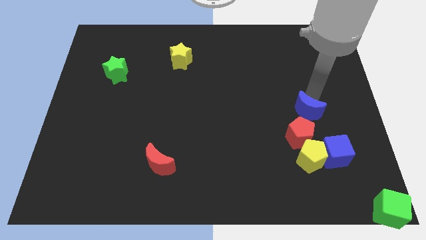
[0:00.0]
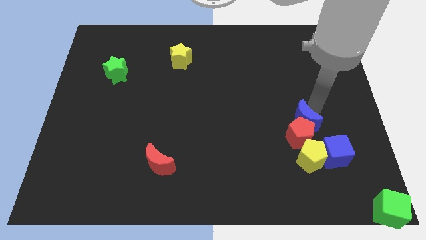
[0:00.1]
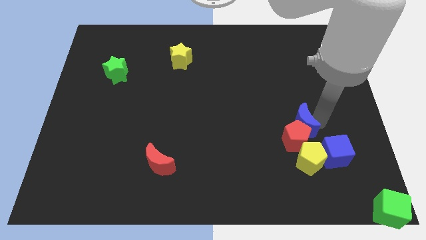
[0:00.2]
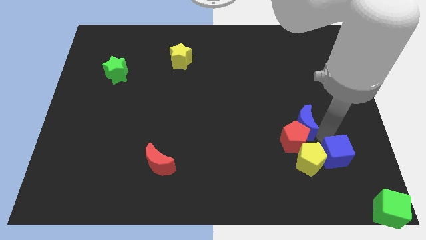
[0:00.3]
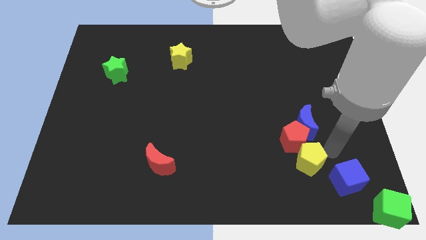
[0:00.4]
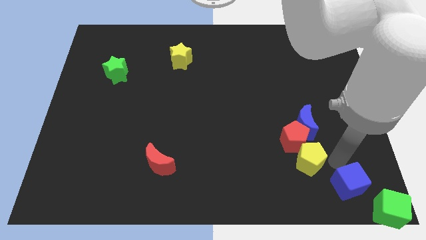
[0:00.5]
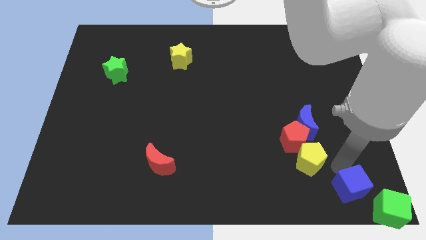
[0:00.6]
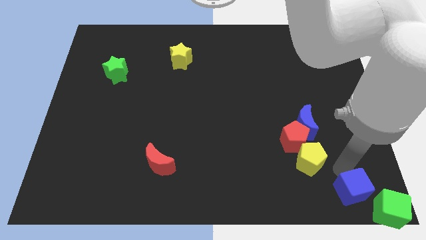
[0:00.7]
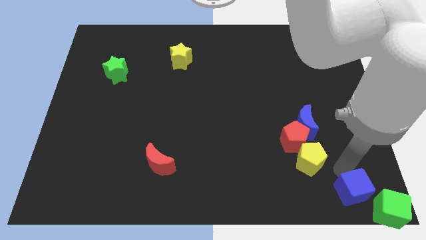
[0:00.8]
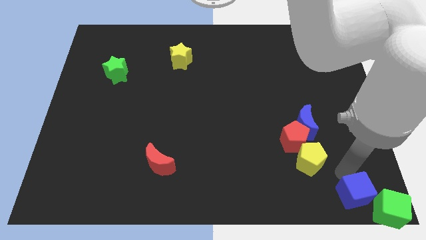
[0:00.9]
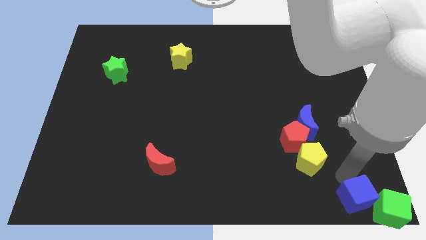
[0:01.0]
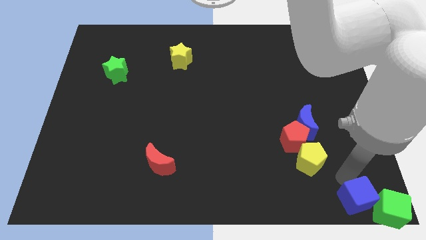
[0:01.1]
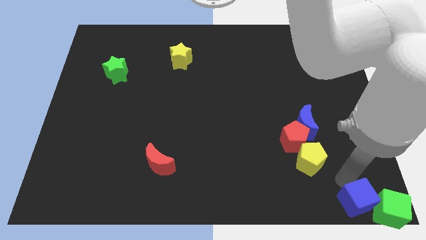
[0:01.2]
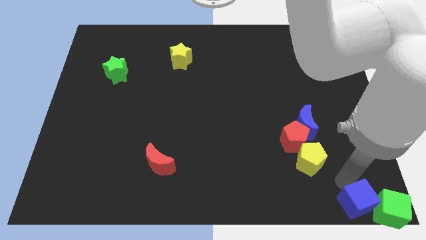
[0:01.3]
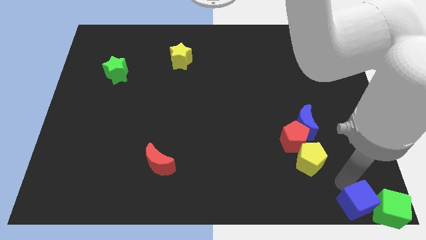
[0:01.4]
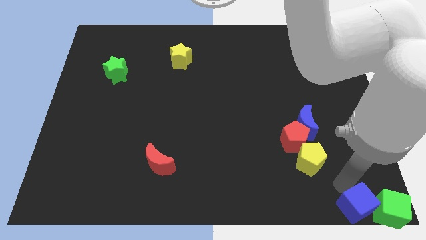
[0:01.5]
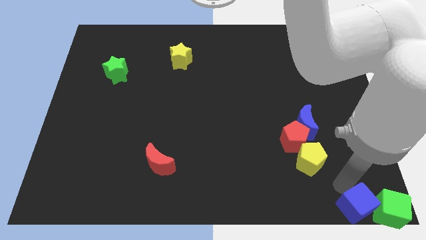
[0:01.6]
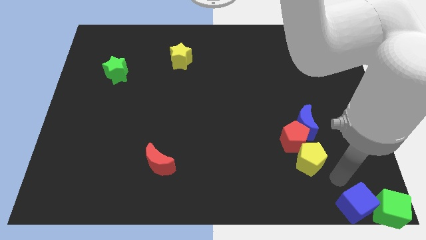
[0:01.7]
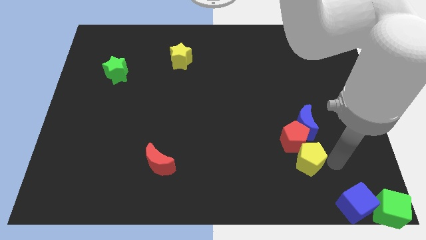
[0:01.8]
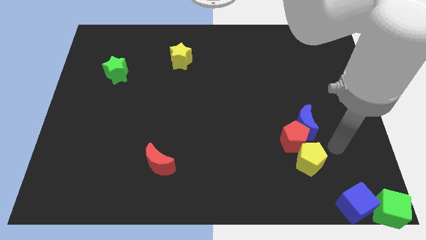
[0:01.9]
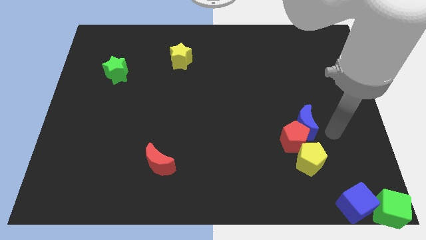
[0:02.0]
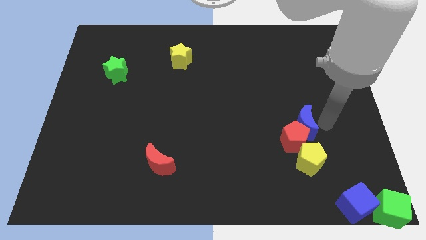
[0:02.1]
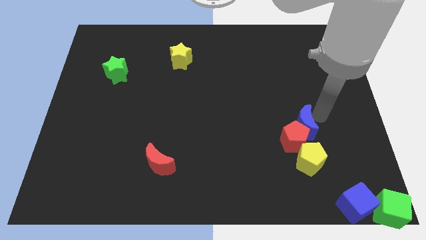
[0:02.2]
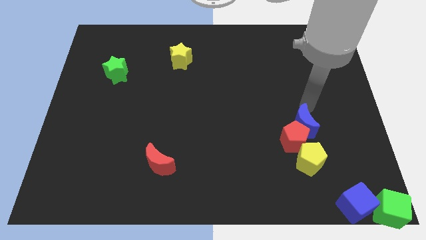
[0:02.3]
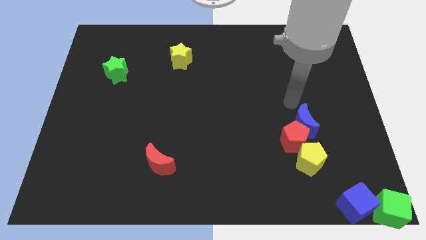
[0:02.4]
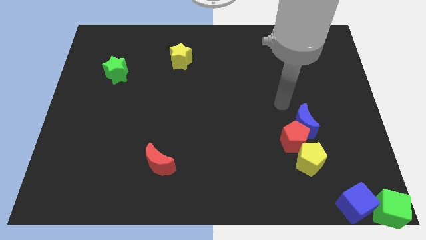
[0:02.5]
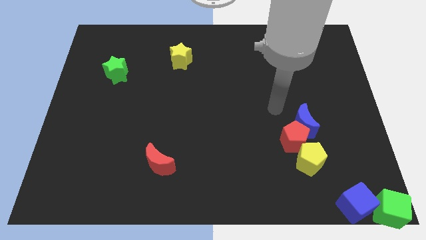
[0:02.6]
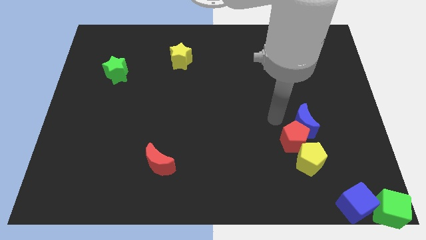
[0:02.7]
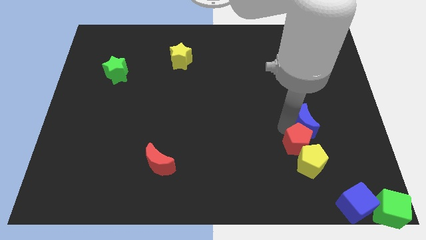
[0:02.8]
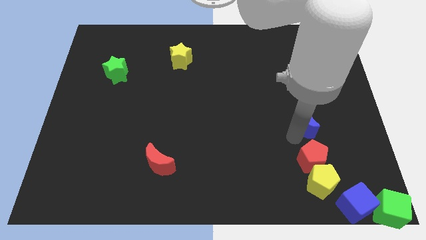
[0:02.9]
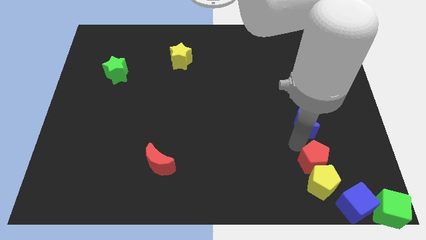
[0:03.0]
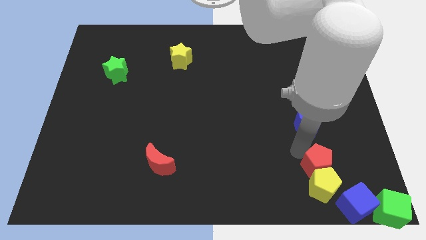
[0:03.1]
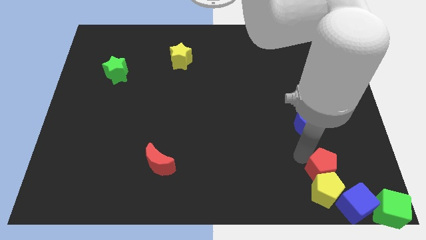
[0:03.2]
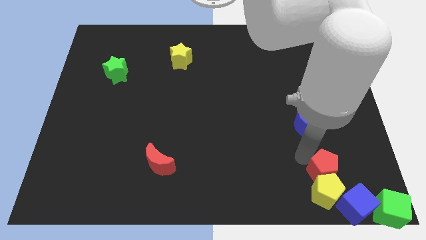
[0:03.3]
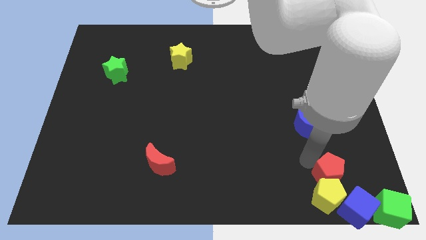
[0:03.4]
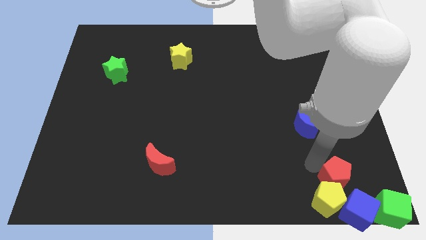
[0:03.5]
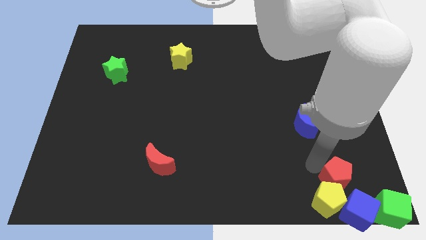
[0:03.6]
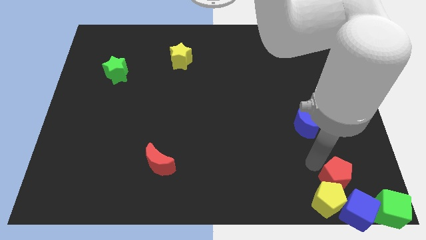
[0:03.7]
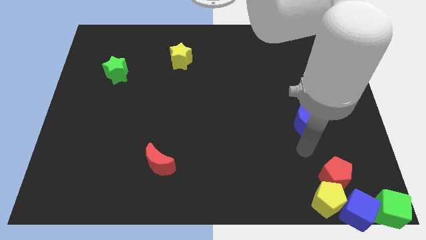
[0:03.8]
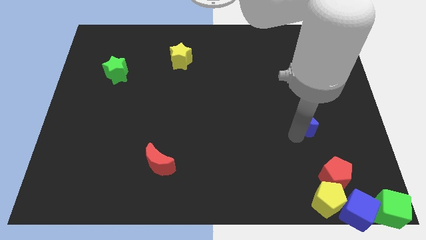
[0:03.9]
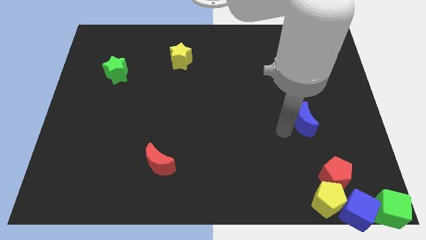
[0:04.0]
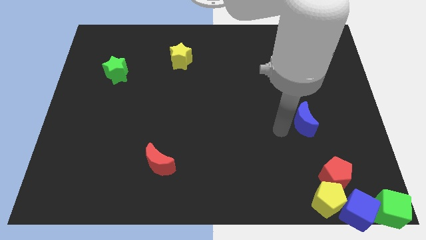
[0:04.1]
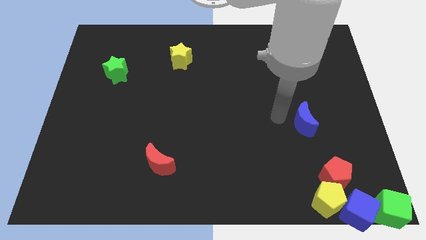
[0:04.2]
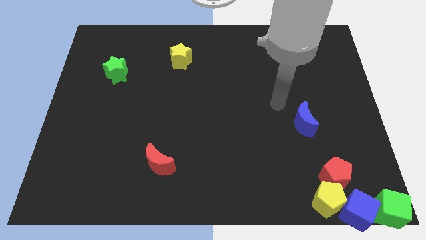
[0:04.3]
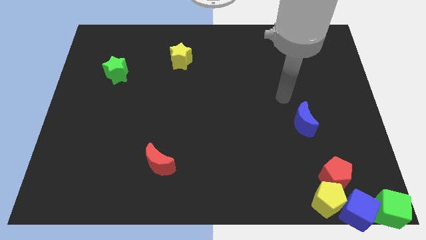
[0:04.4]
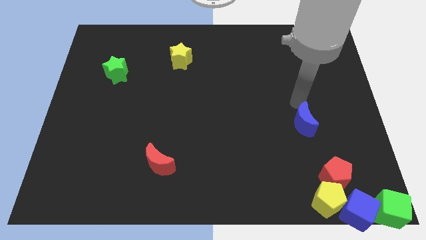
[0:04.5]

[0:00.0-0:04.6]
move the red and yellow pentagon into the blue cube

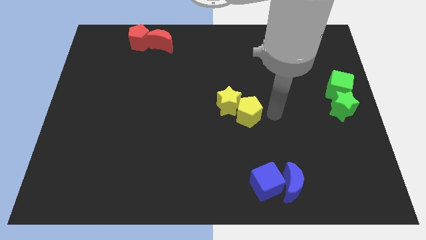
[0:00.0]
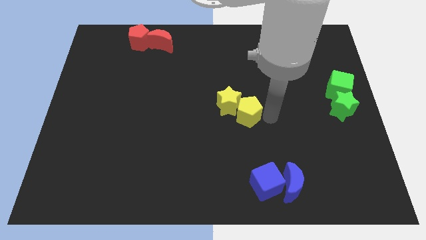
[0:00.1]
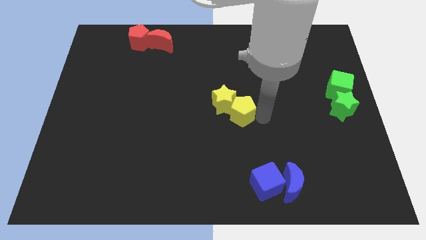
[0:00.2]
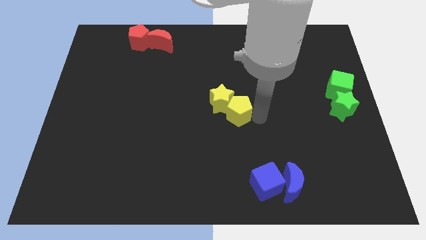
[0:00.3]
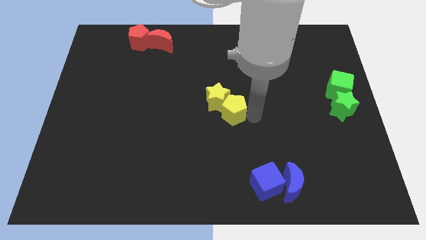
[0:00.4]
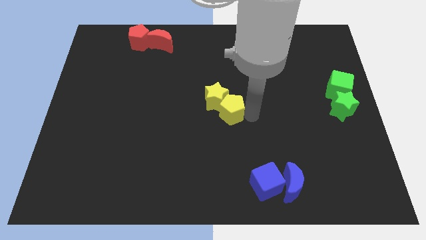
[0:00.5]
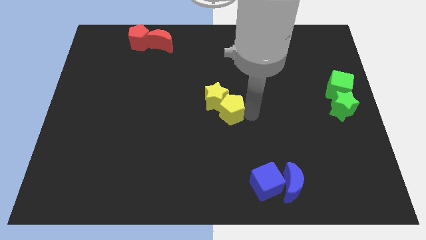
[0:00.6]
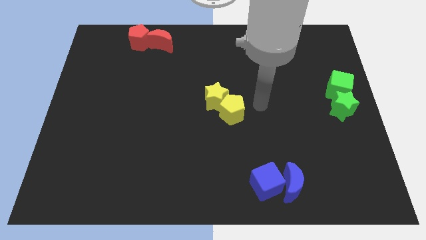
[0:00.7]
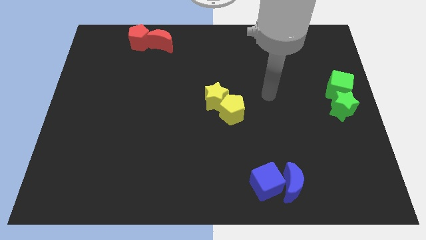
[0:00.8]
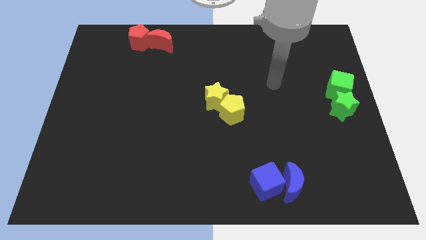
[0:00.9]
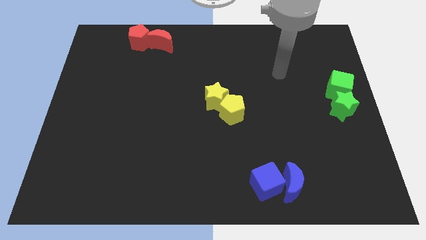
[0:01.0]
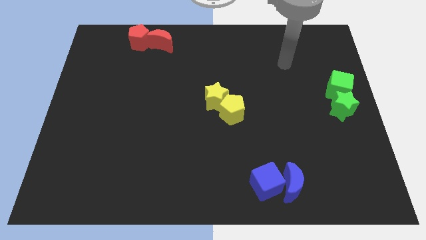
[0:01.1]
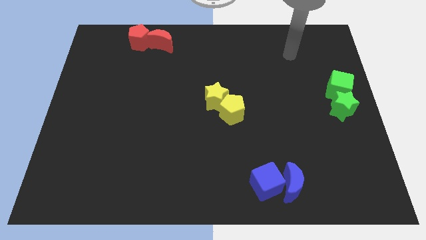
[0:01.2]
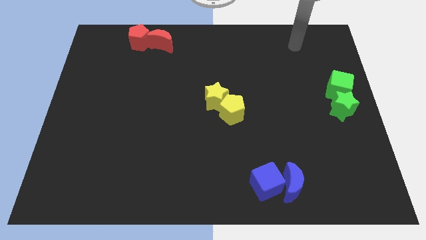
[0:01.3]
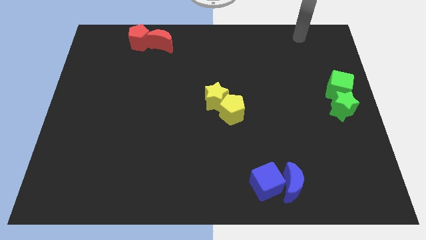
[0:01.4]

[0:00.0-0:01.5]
move the yellow blocks to the center of the blocks

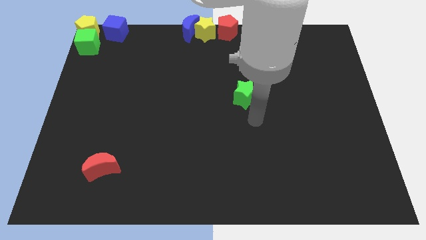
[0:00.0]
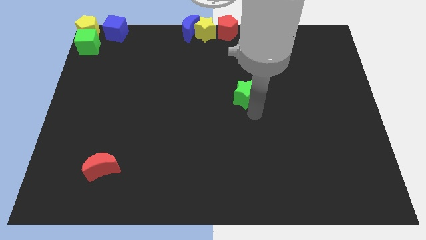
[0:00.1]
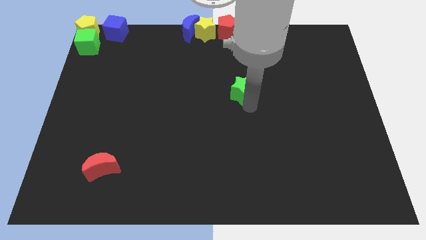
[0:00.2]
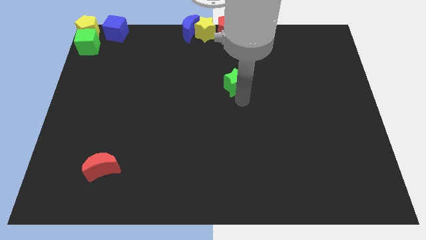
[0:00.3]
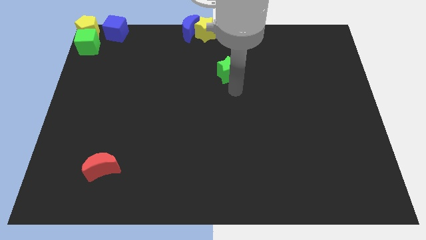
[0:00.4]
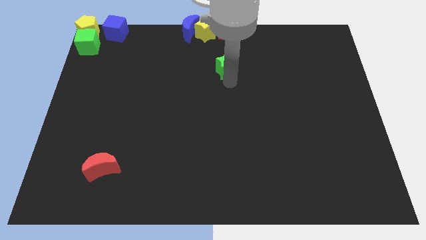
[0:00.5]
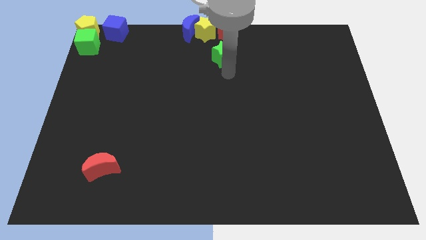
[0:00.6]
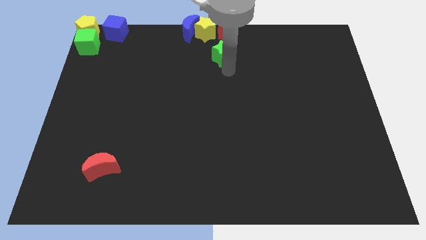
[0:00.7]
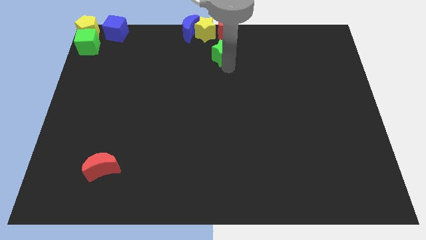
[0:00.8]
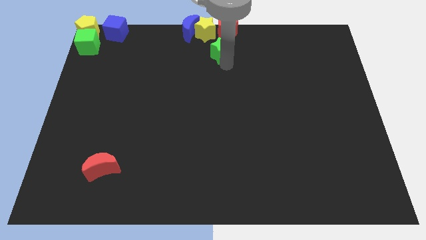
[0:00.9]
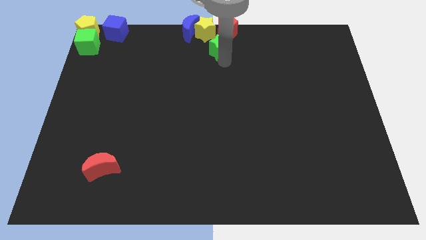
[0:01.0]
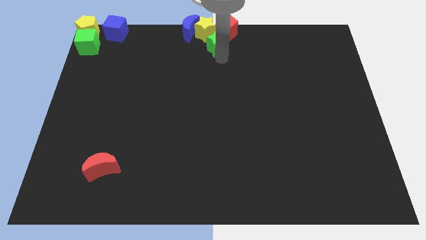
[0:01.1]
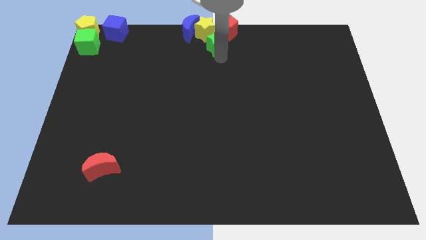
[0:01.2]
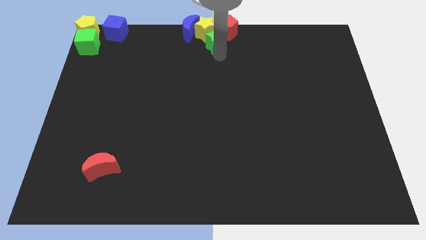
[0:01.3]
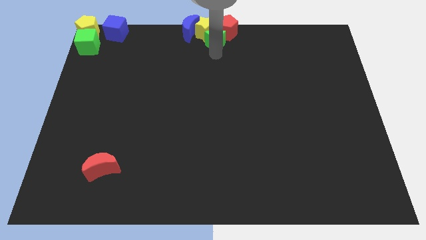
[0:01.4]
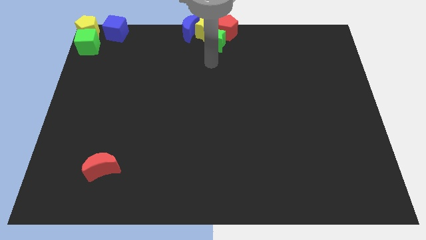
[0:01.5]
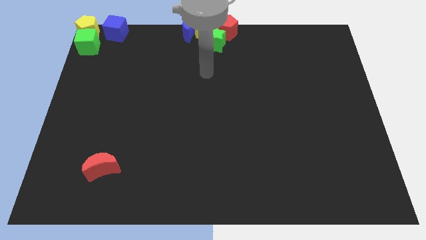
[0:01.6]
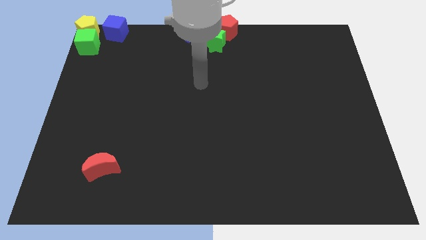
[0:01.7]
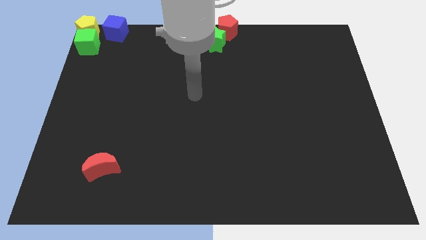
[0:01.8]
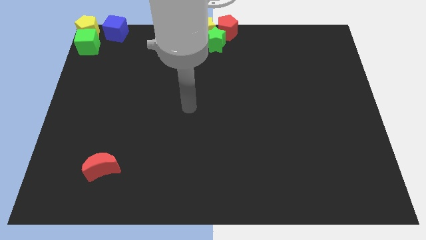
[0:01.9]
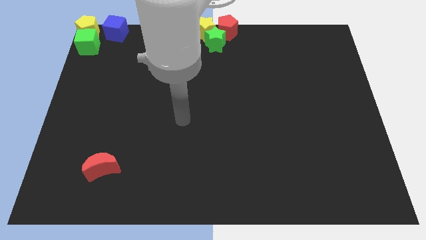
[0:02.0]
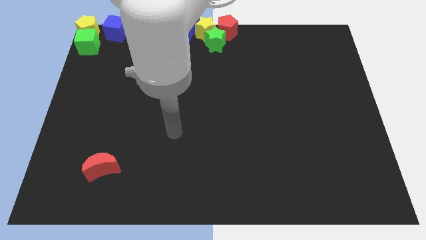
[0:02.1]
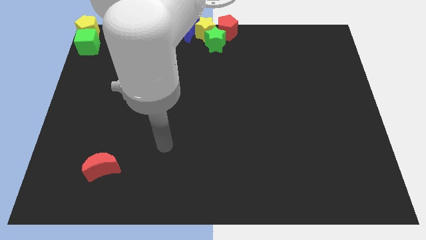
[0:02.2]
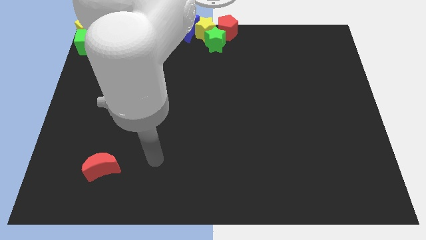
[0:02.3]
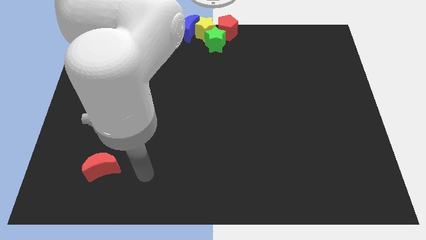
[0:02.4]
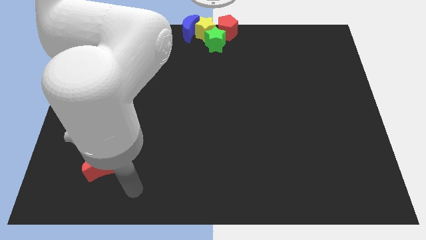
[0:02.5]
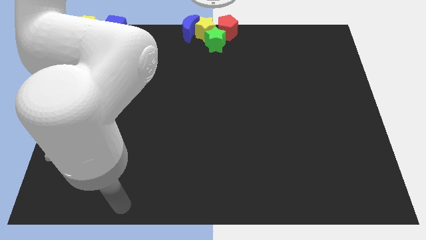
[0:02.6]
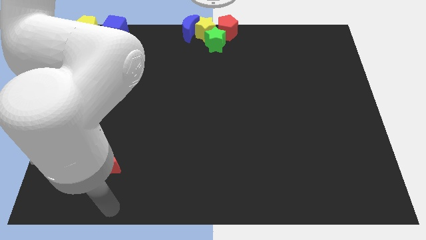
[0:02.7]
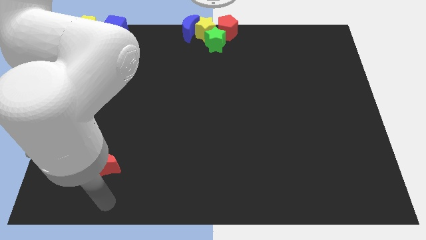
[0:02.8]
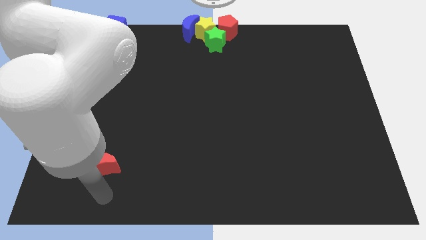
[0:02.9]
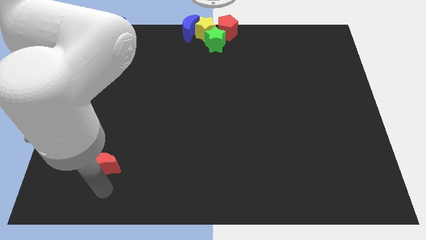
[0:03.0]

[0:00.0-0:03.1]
put the green star into the yellow star
